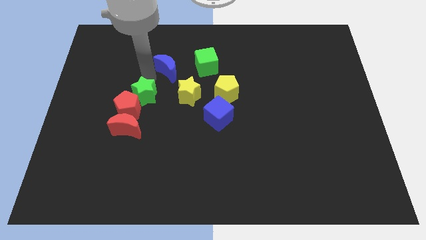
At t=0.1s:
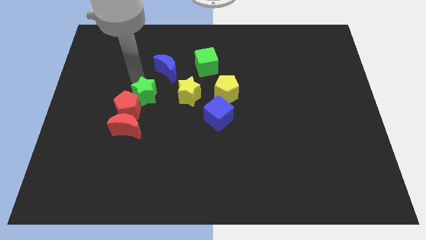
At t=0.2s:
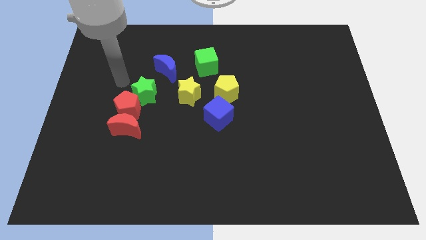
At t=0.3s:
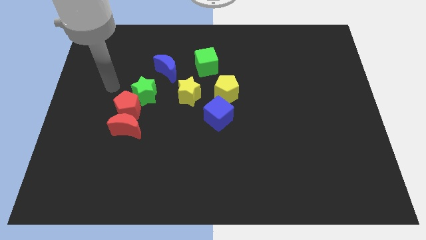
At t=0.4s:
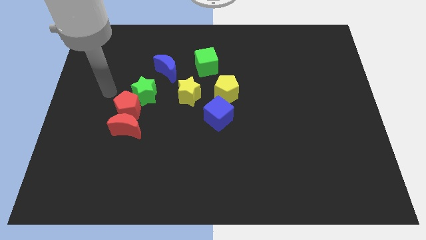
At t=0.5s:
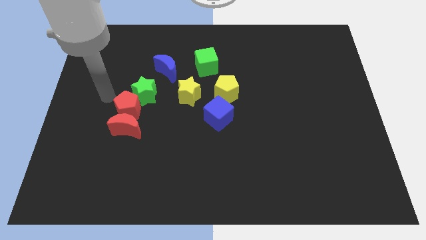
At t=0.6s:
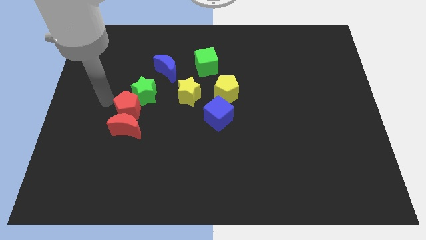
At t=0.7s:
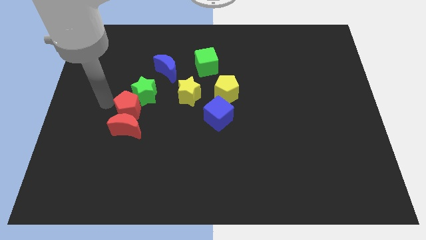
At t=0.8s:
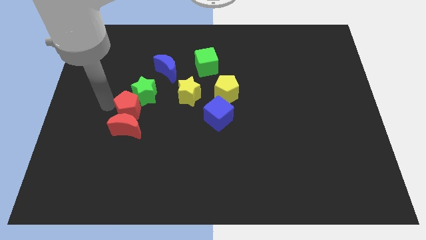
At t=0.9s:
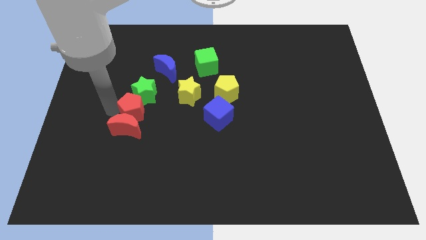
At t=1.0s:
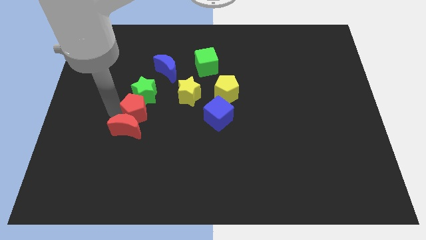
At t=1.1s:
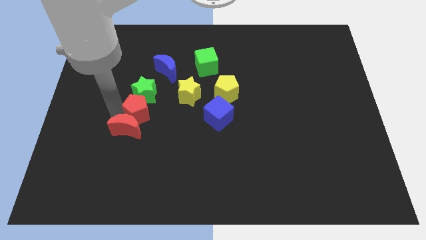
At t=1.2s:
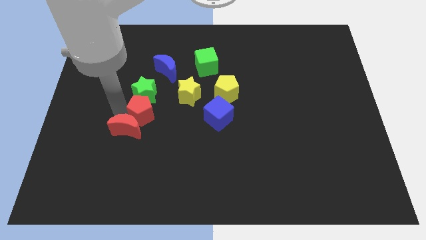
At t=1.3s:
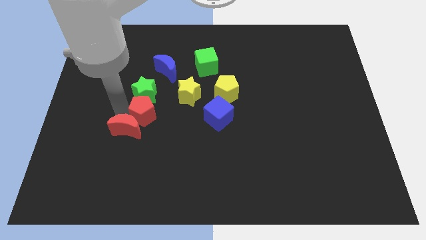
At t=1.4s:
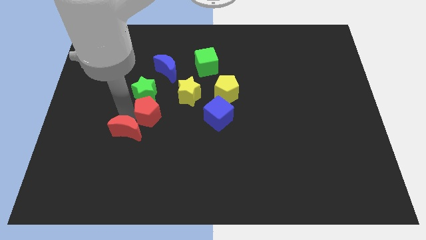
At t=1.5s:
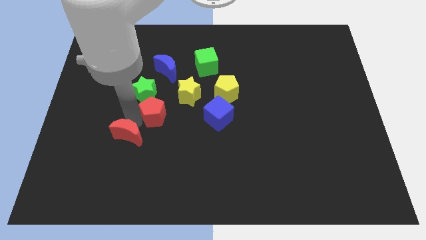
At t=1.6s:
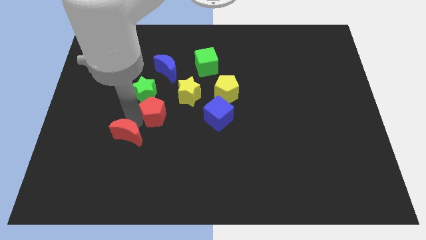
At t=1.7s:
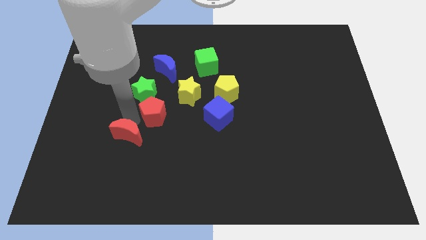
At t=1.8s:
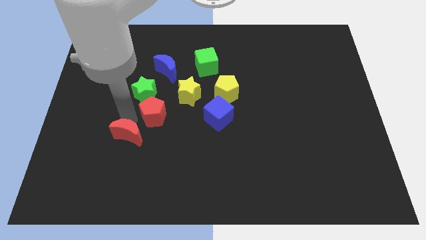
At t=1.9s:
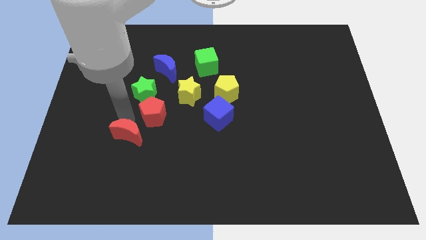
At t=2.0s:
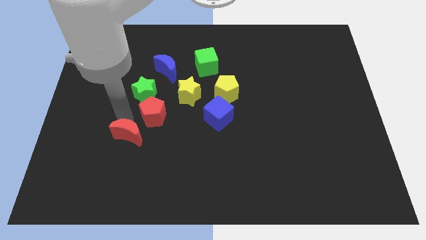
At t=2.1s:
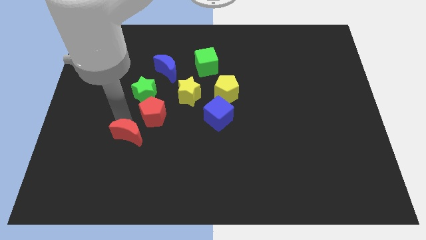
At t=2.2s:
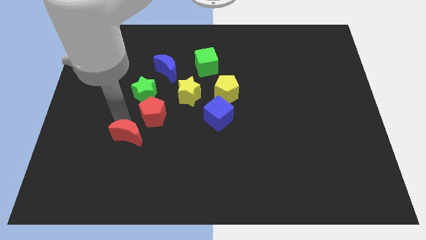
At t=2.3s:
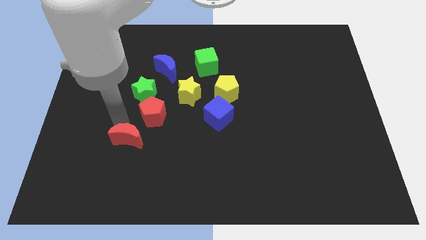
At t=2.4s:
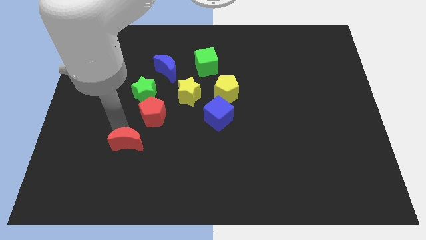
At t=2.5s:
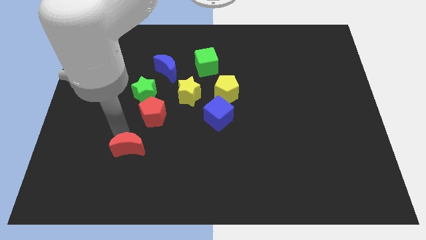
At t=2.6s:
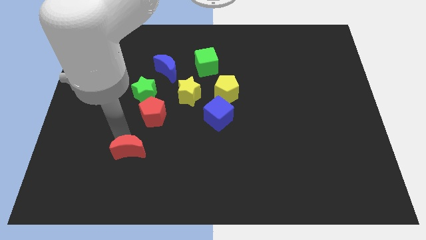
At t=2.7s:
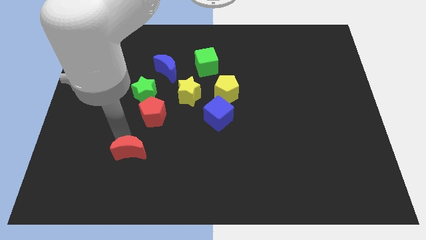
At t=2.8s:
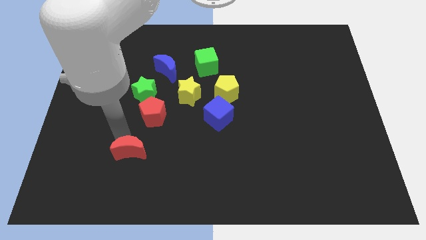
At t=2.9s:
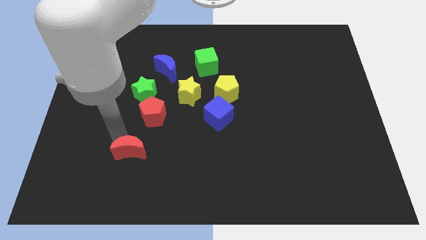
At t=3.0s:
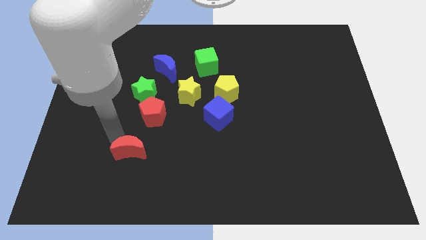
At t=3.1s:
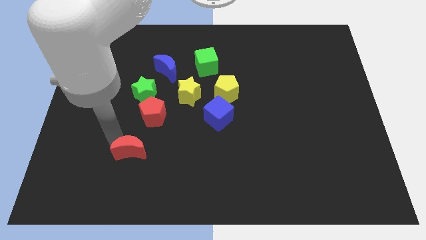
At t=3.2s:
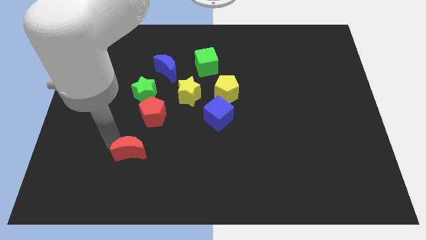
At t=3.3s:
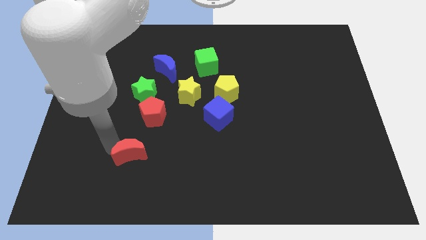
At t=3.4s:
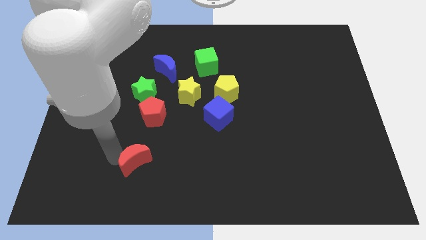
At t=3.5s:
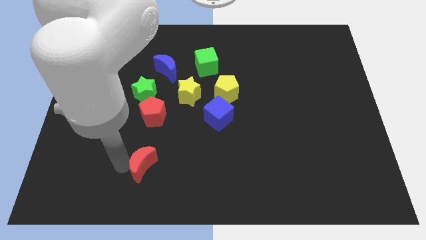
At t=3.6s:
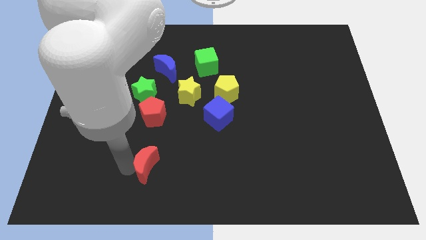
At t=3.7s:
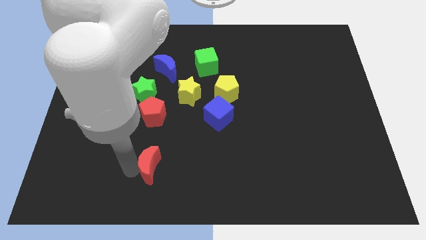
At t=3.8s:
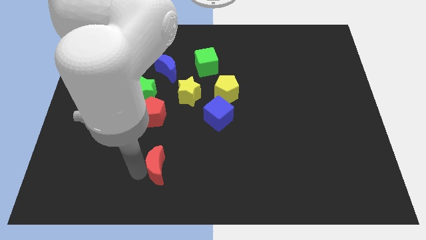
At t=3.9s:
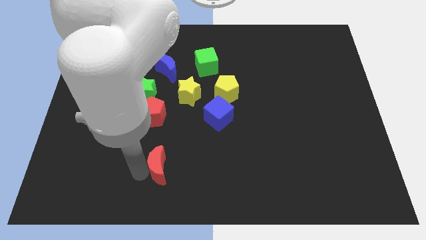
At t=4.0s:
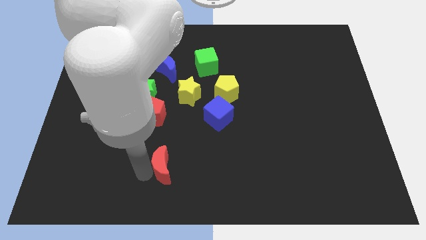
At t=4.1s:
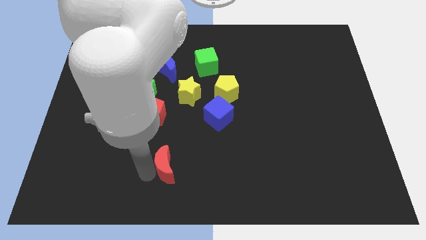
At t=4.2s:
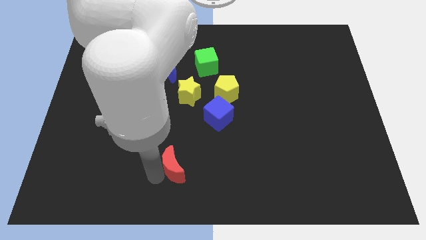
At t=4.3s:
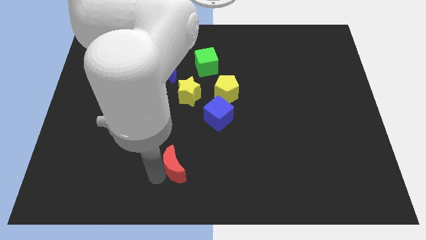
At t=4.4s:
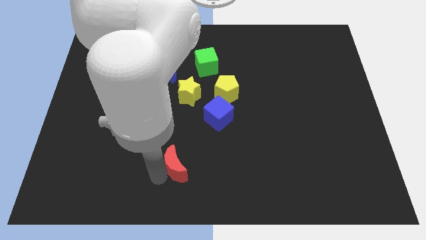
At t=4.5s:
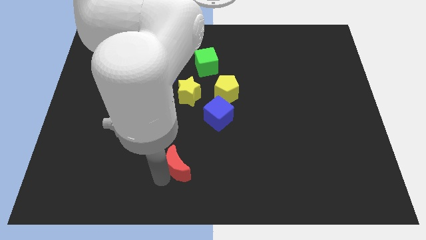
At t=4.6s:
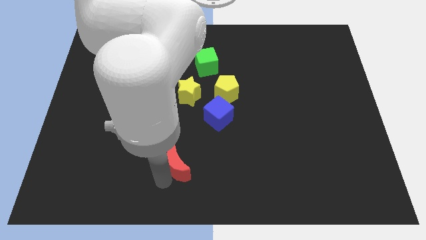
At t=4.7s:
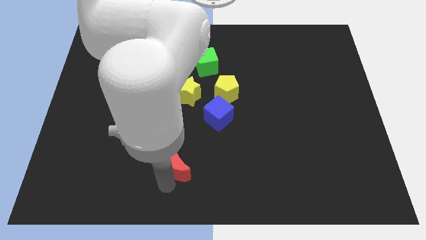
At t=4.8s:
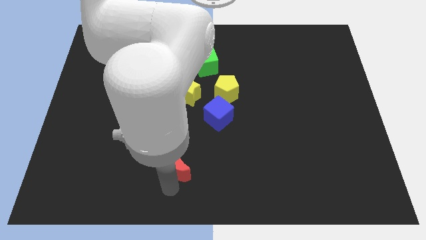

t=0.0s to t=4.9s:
separate the red crescent from red pentagon

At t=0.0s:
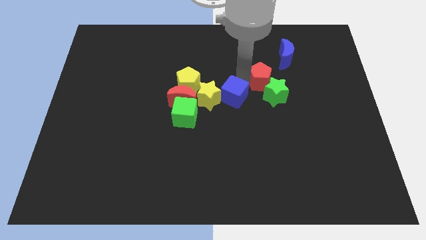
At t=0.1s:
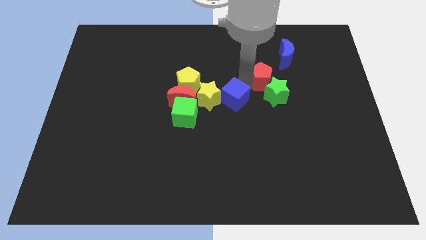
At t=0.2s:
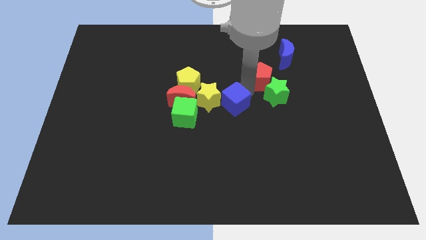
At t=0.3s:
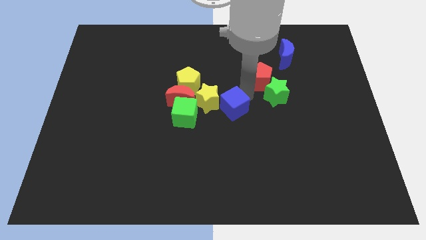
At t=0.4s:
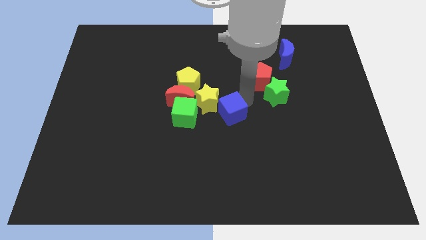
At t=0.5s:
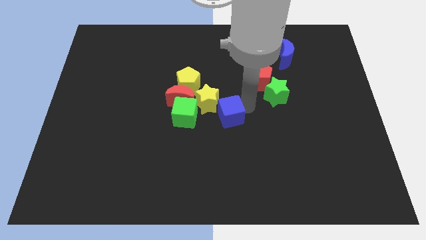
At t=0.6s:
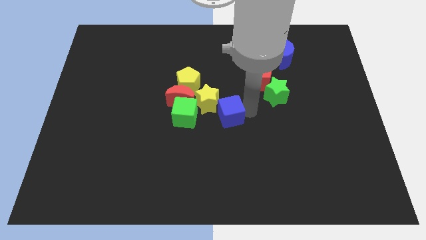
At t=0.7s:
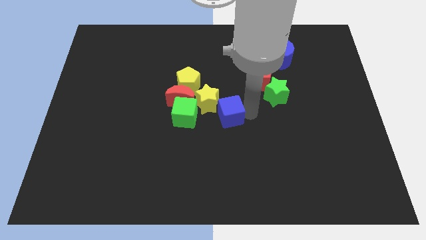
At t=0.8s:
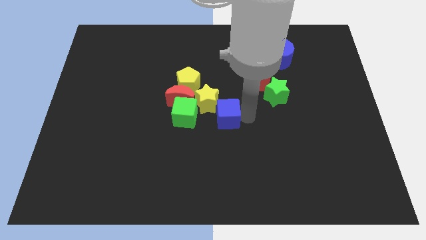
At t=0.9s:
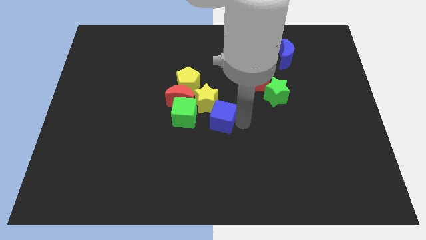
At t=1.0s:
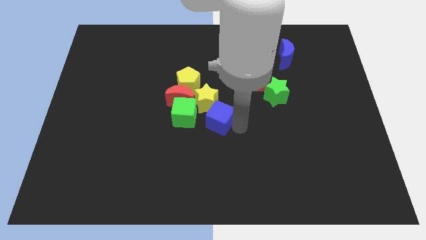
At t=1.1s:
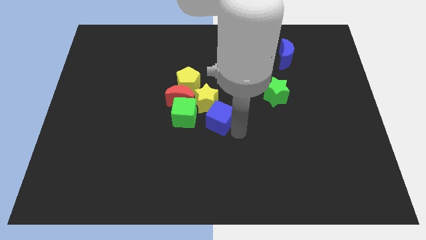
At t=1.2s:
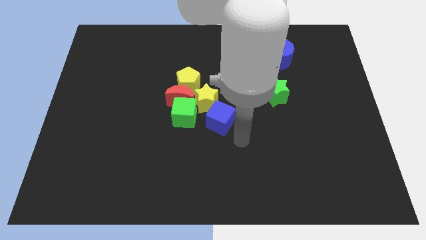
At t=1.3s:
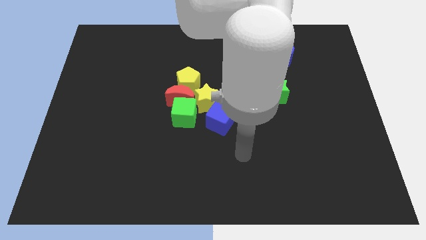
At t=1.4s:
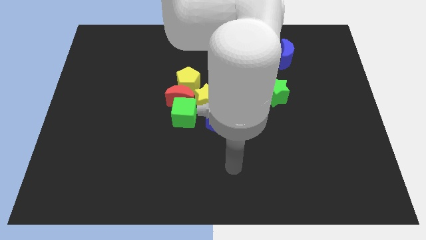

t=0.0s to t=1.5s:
place the blue cube right to the green cube

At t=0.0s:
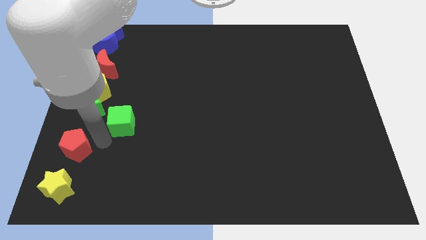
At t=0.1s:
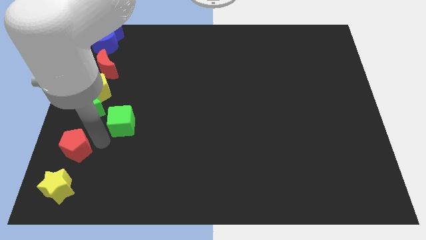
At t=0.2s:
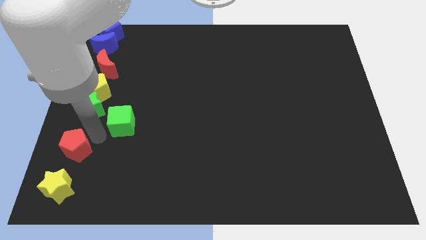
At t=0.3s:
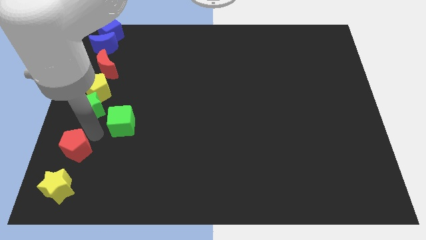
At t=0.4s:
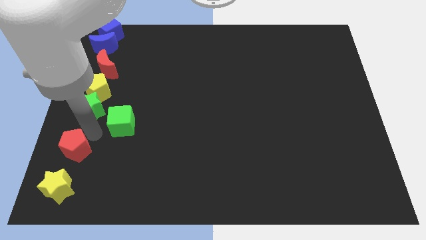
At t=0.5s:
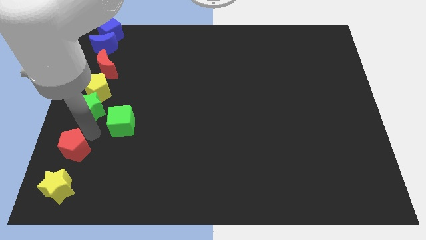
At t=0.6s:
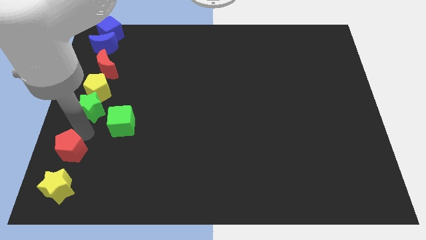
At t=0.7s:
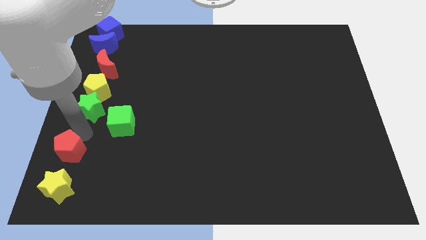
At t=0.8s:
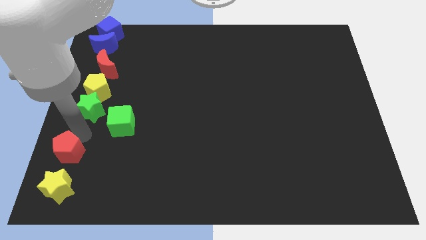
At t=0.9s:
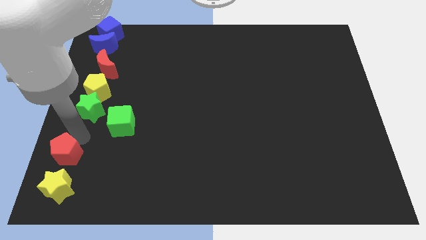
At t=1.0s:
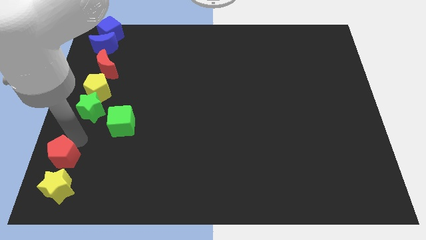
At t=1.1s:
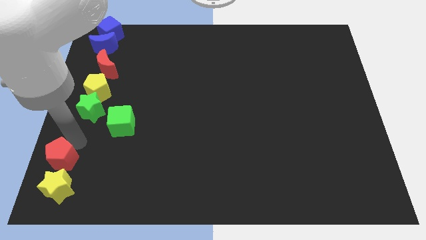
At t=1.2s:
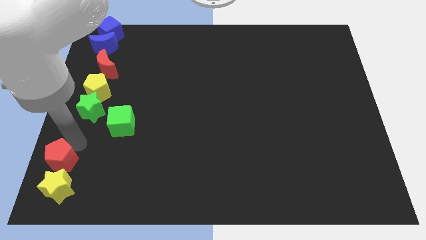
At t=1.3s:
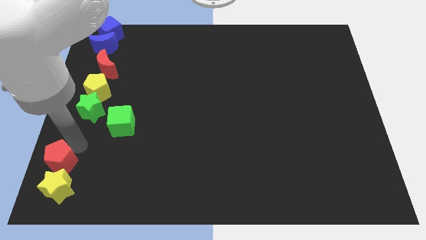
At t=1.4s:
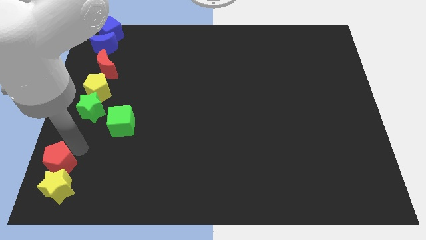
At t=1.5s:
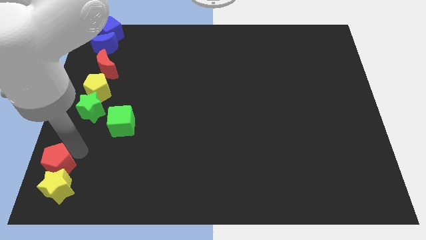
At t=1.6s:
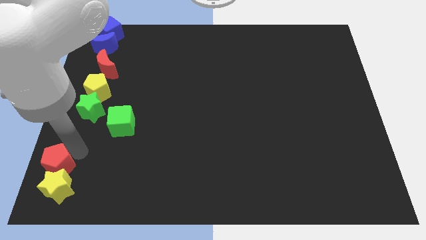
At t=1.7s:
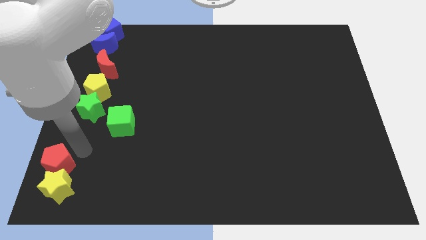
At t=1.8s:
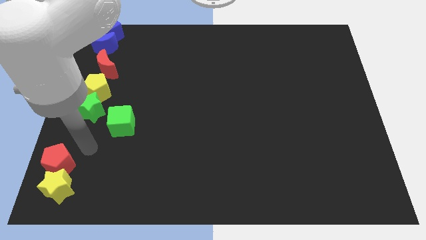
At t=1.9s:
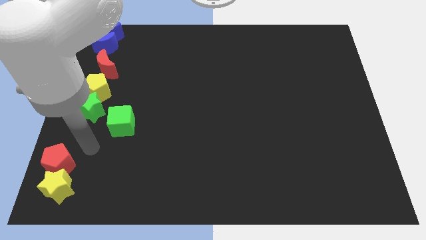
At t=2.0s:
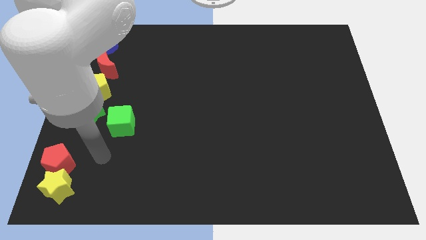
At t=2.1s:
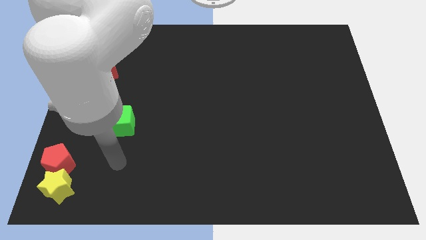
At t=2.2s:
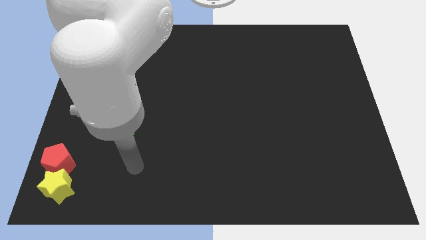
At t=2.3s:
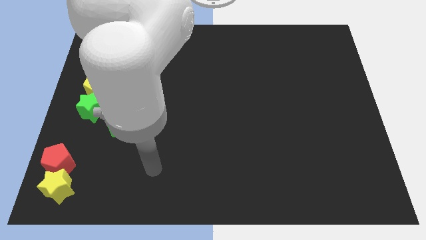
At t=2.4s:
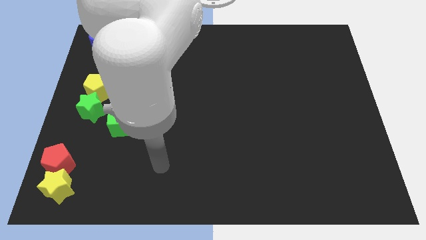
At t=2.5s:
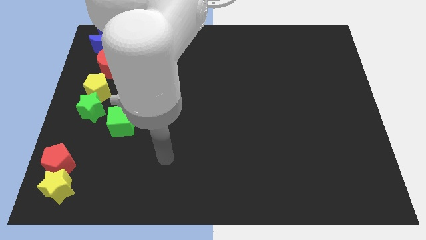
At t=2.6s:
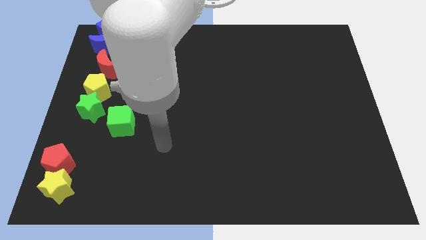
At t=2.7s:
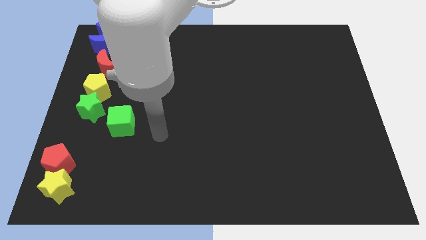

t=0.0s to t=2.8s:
move the red pentagon into the yellow star
